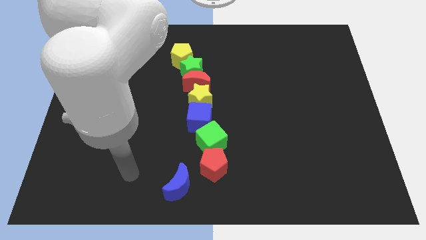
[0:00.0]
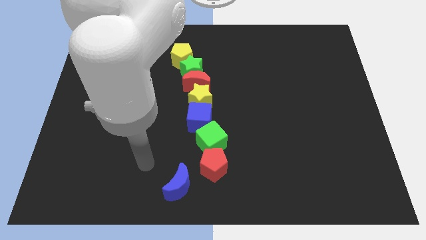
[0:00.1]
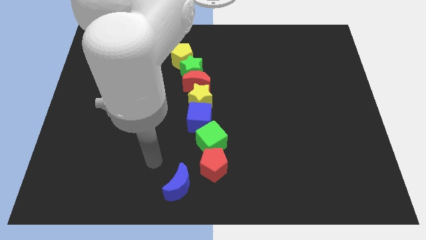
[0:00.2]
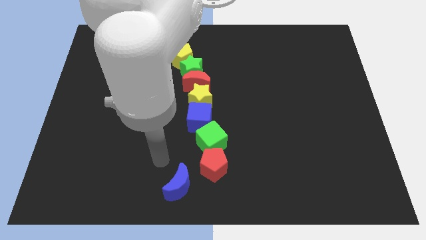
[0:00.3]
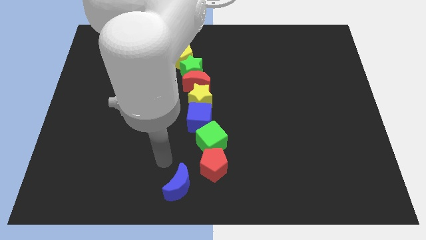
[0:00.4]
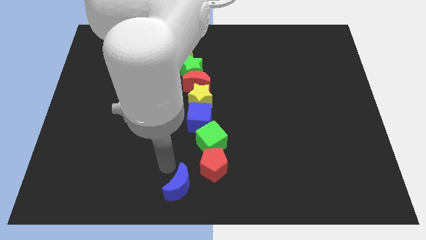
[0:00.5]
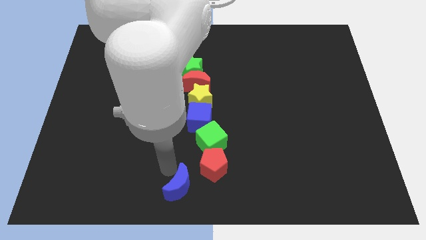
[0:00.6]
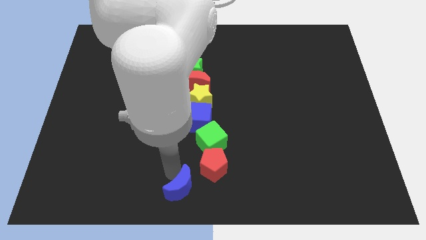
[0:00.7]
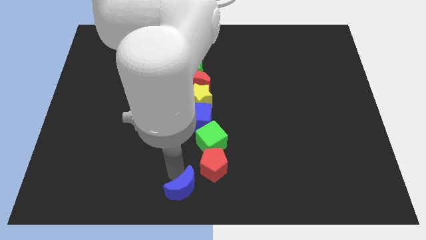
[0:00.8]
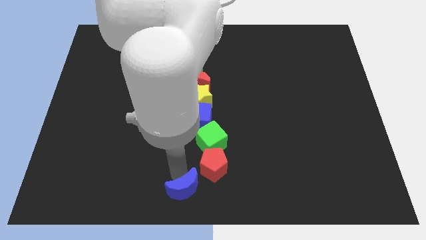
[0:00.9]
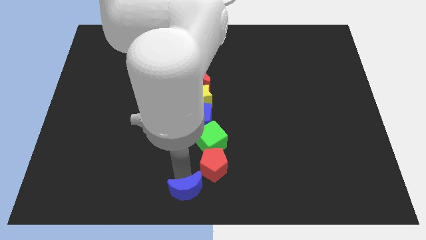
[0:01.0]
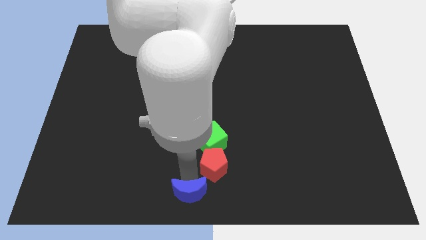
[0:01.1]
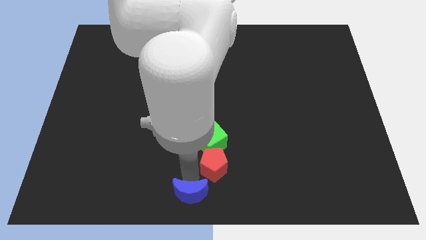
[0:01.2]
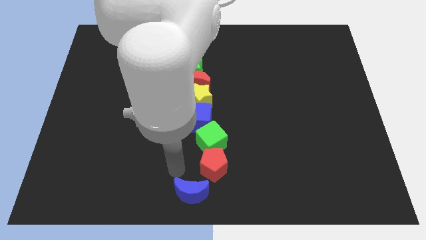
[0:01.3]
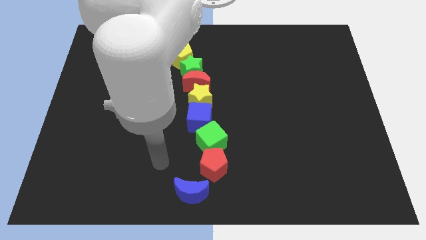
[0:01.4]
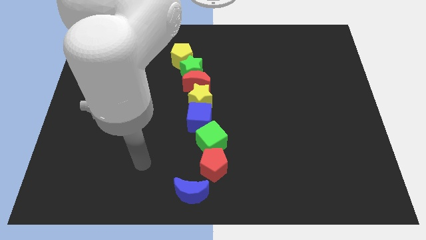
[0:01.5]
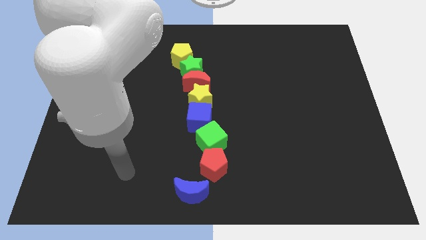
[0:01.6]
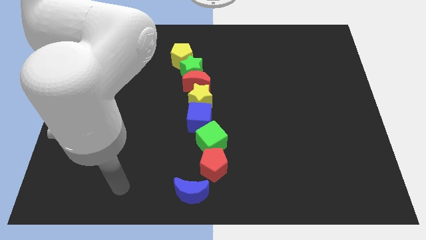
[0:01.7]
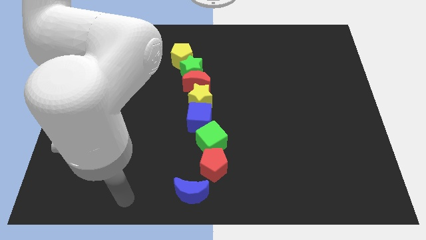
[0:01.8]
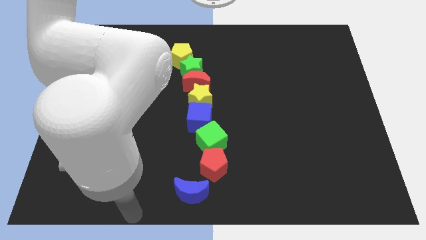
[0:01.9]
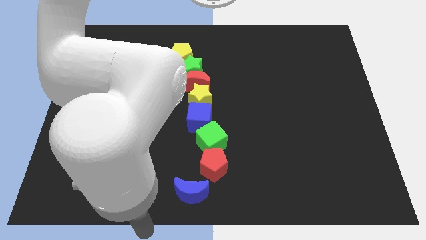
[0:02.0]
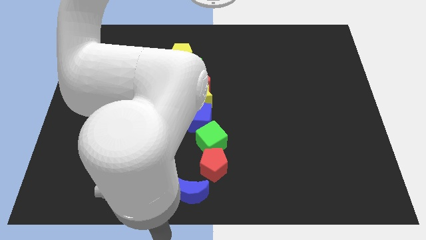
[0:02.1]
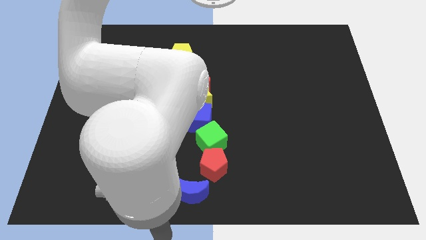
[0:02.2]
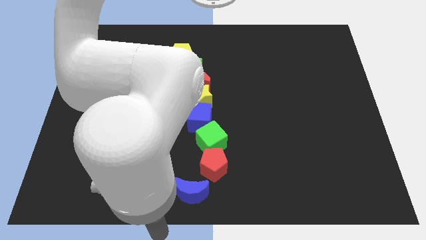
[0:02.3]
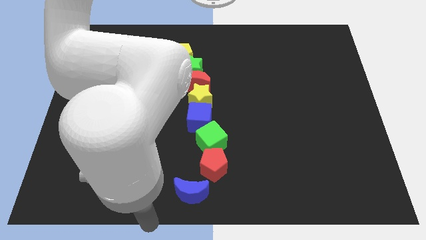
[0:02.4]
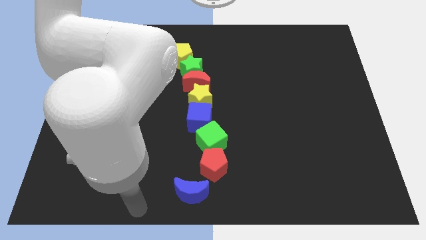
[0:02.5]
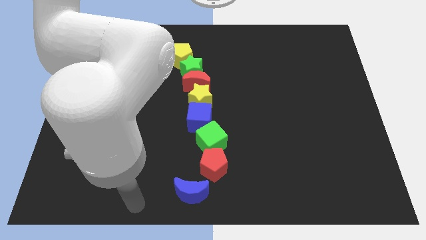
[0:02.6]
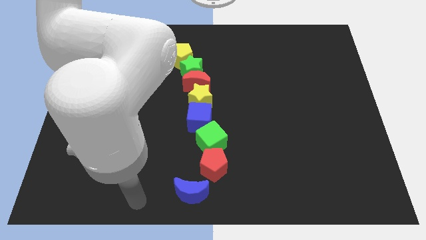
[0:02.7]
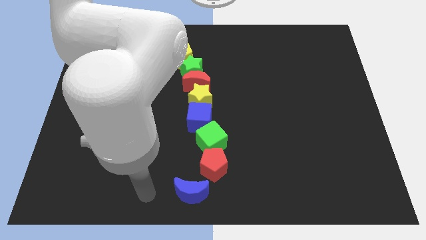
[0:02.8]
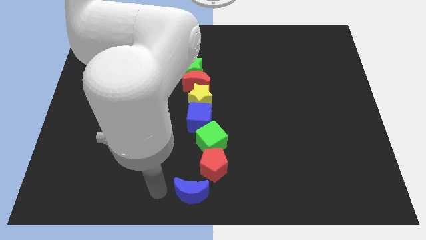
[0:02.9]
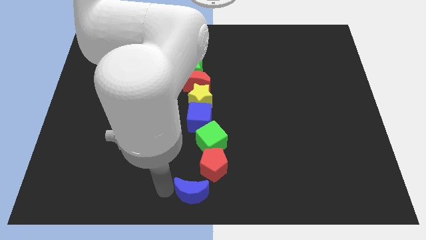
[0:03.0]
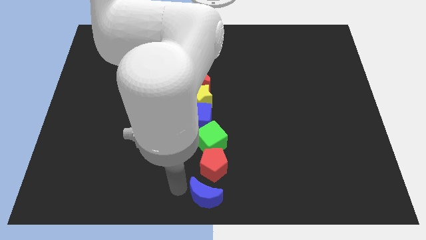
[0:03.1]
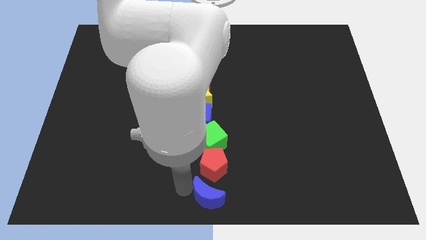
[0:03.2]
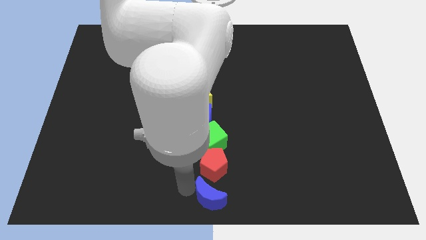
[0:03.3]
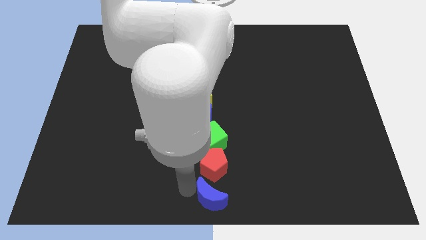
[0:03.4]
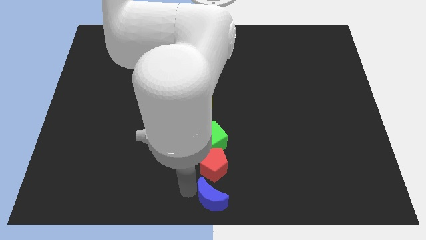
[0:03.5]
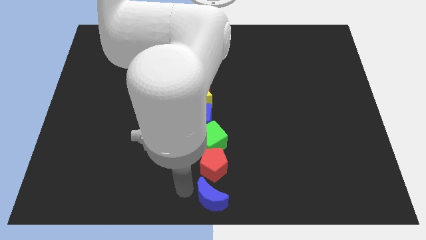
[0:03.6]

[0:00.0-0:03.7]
place the blue moon at the bottom center of the board

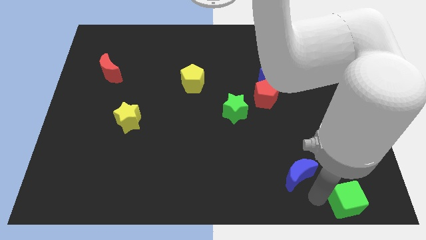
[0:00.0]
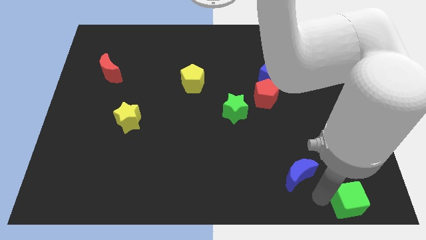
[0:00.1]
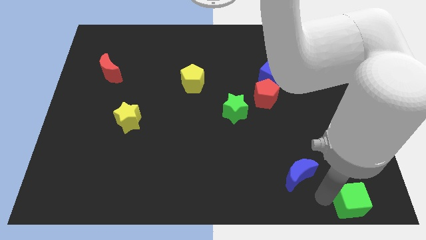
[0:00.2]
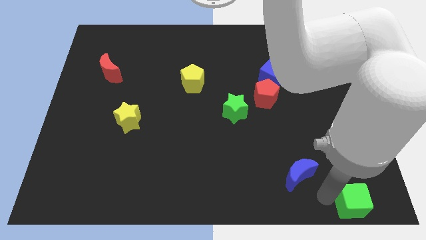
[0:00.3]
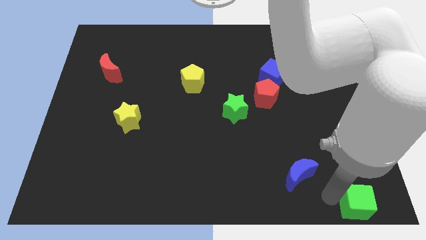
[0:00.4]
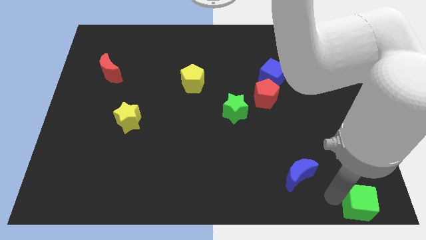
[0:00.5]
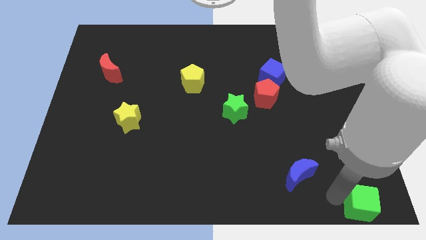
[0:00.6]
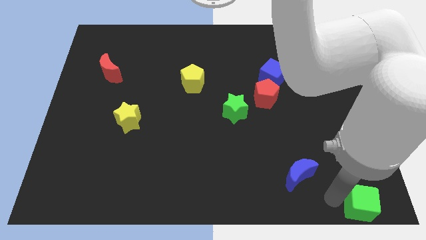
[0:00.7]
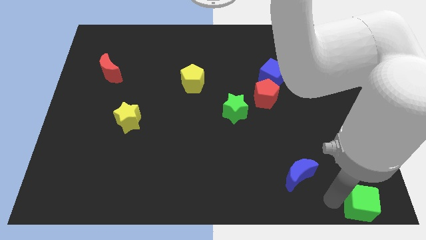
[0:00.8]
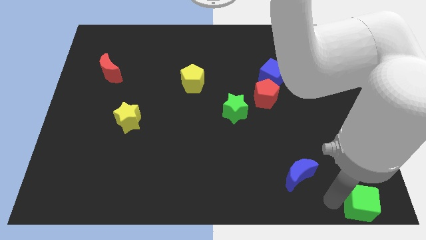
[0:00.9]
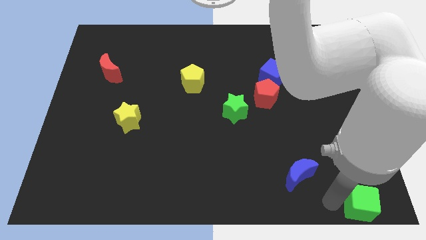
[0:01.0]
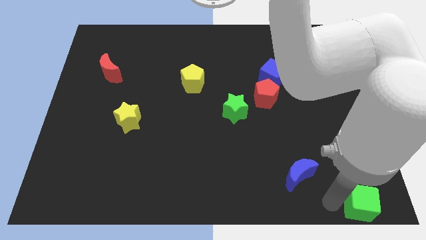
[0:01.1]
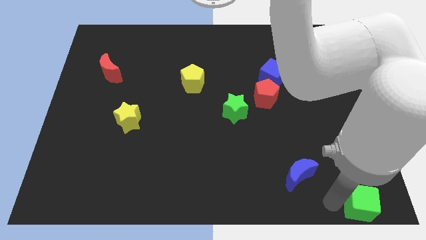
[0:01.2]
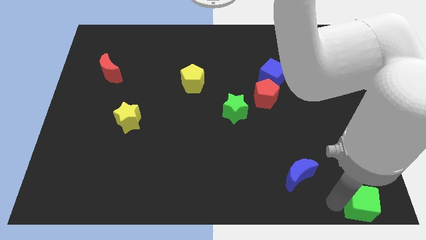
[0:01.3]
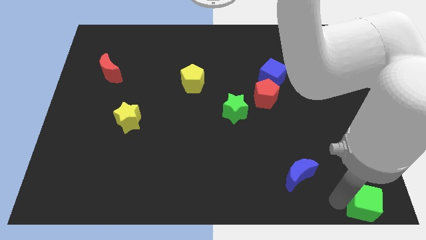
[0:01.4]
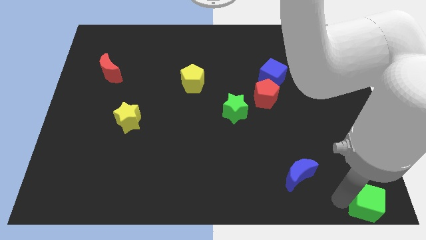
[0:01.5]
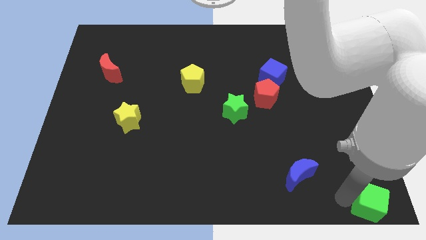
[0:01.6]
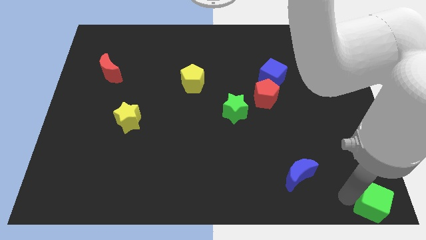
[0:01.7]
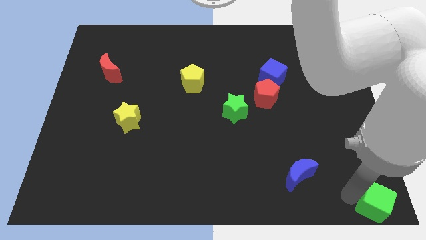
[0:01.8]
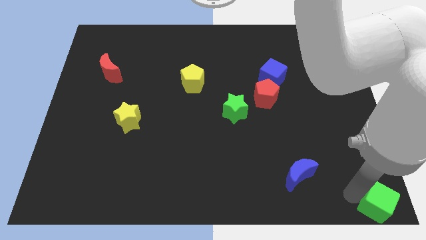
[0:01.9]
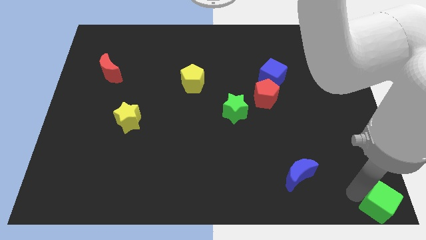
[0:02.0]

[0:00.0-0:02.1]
place green cube to the bottom right corner of the board

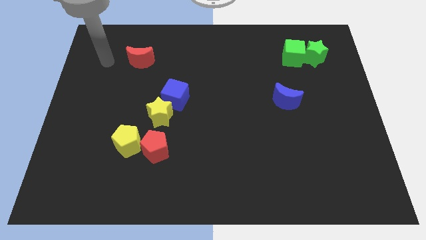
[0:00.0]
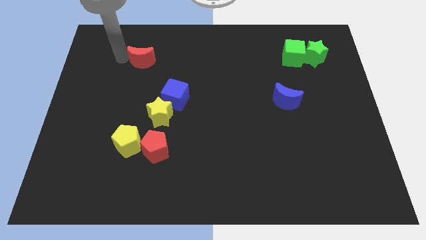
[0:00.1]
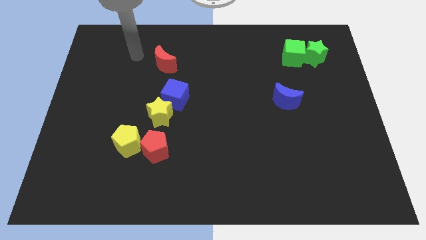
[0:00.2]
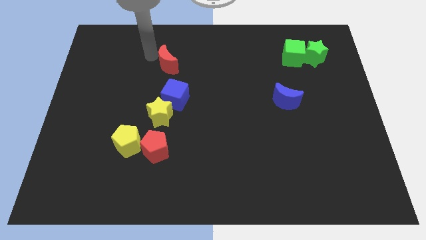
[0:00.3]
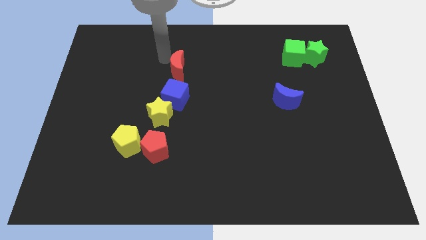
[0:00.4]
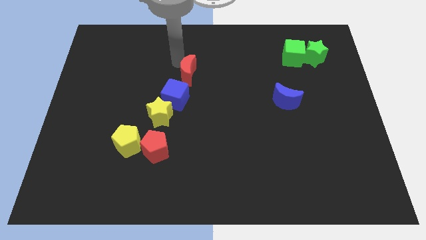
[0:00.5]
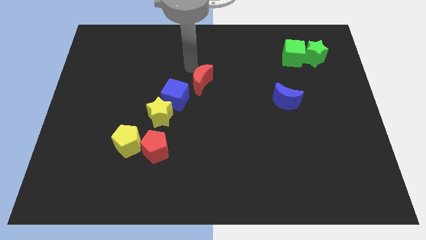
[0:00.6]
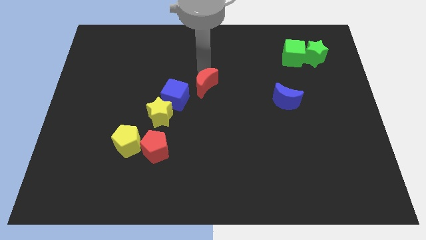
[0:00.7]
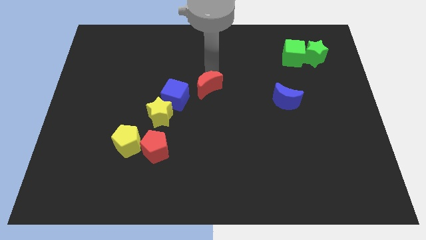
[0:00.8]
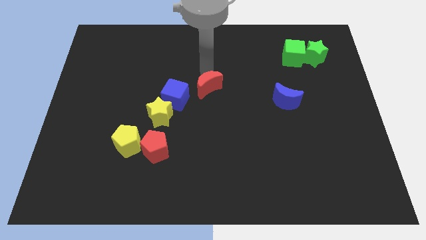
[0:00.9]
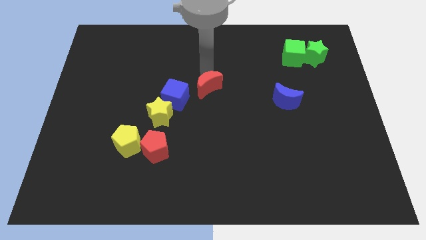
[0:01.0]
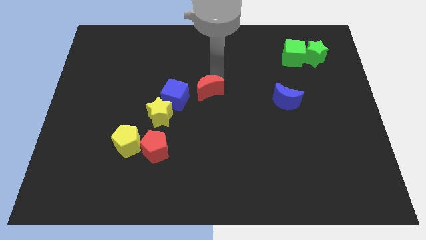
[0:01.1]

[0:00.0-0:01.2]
move the red moon diagonally top right to the blue cube

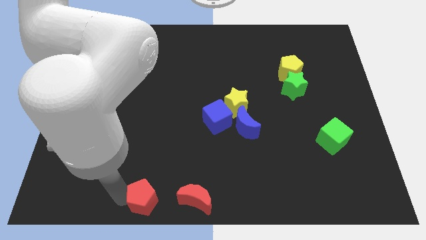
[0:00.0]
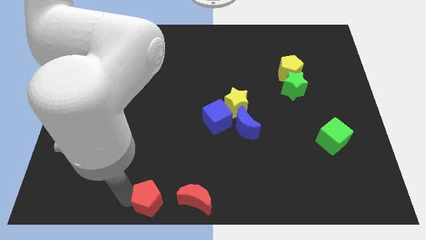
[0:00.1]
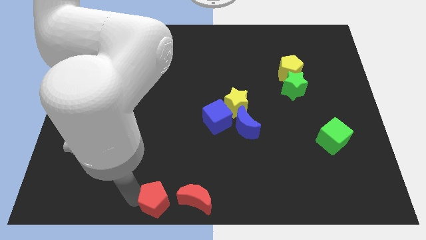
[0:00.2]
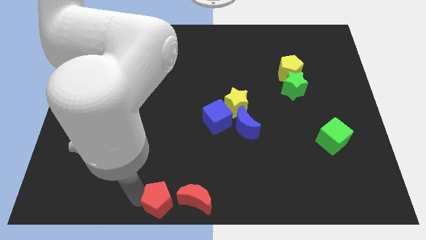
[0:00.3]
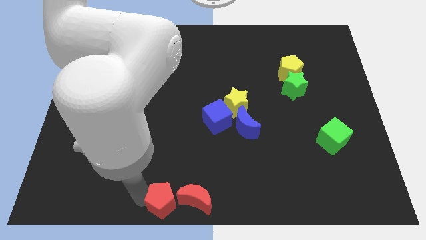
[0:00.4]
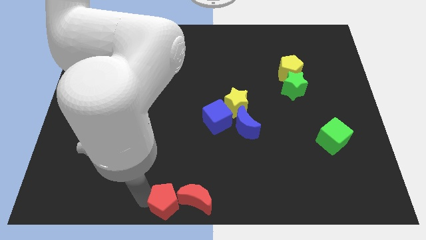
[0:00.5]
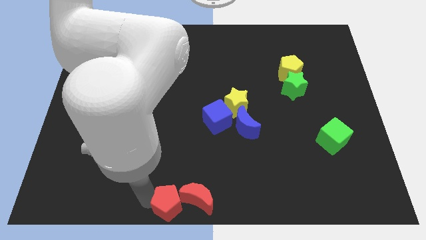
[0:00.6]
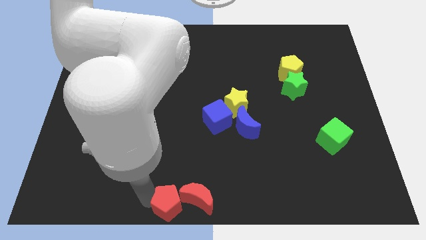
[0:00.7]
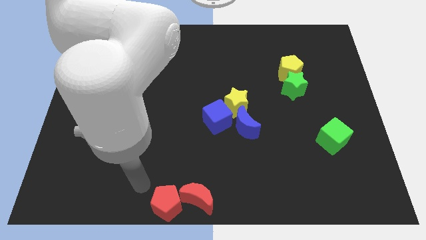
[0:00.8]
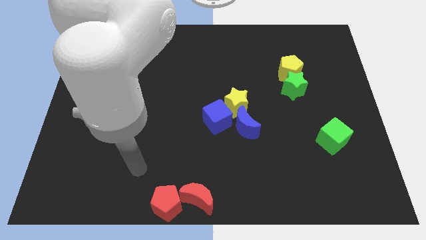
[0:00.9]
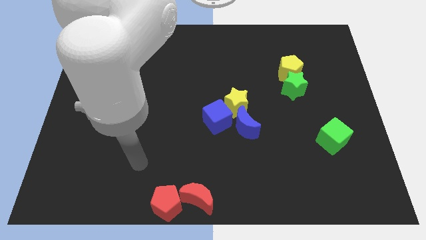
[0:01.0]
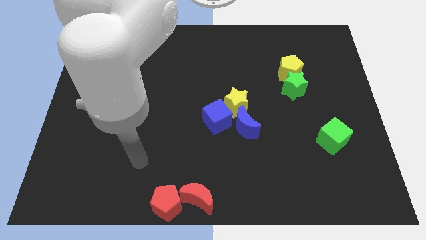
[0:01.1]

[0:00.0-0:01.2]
push the red pentagon into the red moon

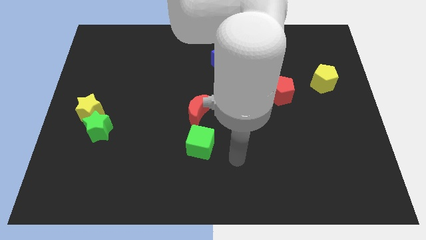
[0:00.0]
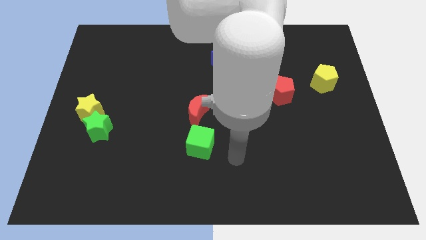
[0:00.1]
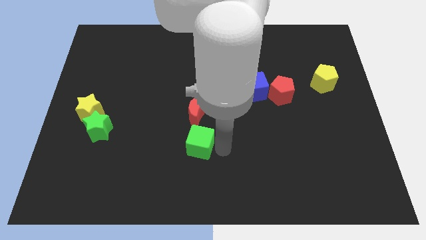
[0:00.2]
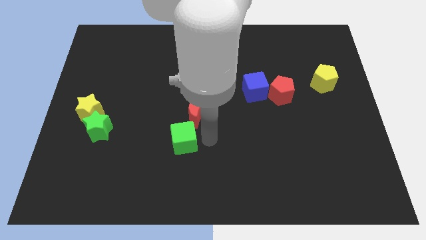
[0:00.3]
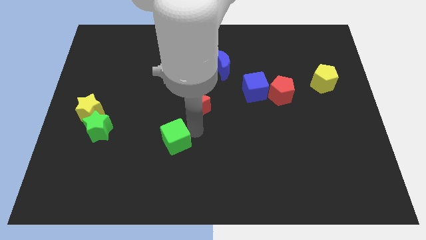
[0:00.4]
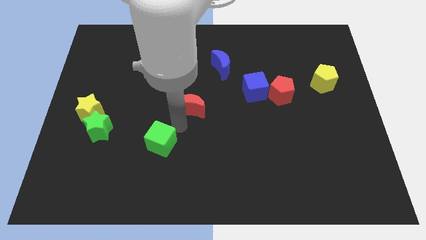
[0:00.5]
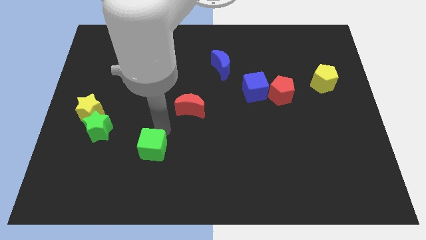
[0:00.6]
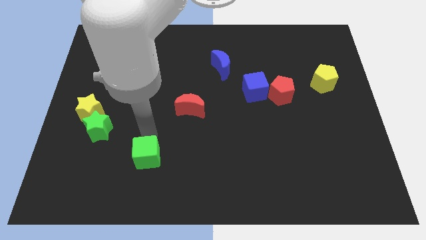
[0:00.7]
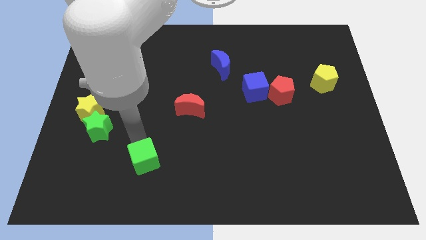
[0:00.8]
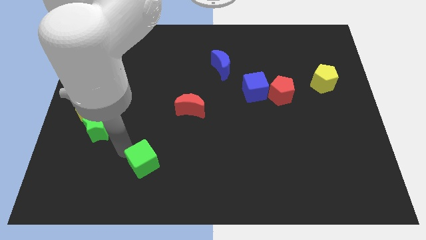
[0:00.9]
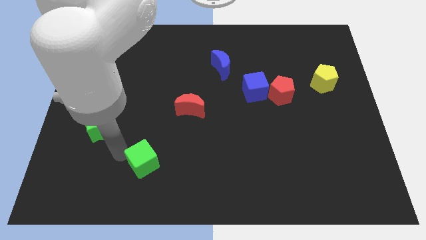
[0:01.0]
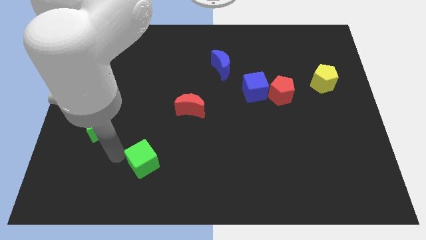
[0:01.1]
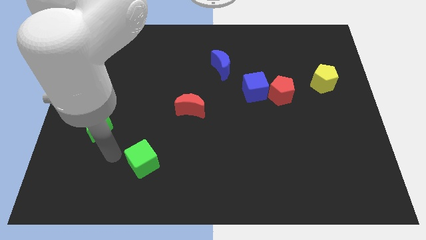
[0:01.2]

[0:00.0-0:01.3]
slide the green cube towards the bottom side
